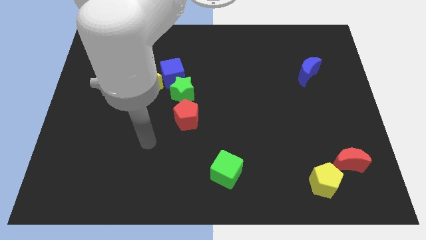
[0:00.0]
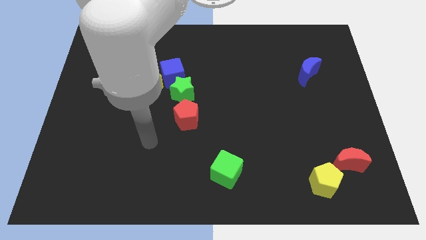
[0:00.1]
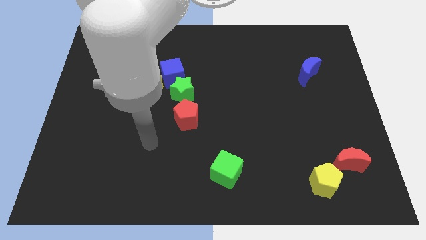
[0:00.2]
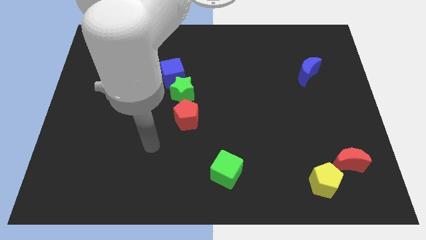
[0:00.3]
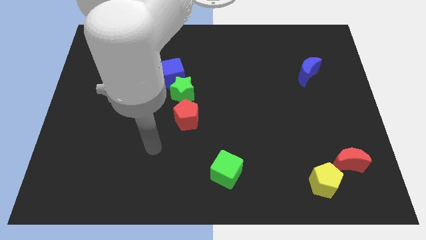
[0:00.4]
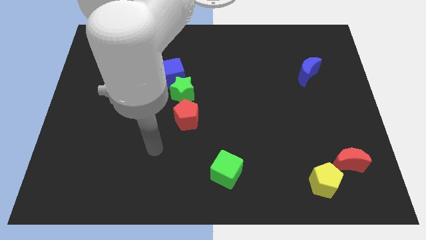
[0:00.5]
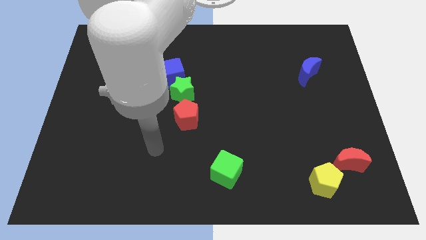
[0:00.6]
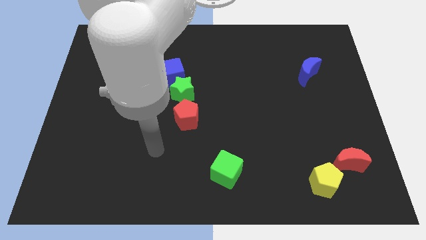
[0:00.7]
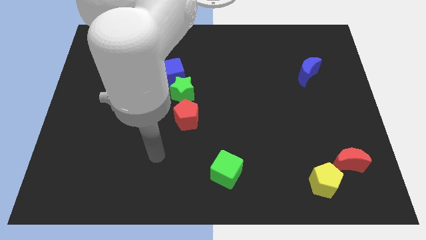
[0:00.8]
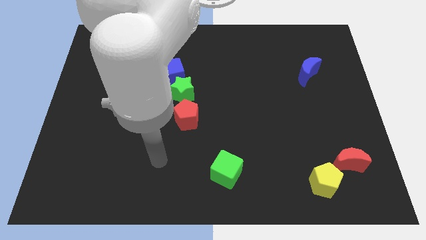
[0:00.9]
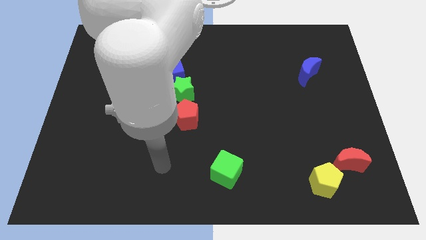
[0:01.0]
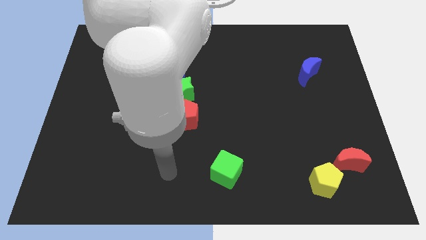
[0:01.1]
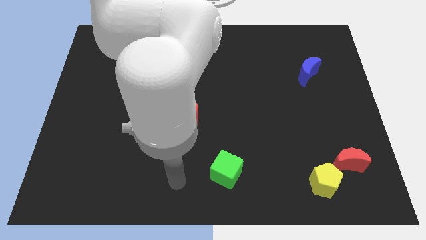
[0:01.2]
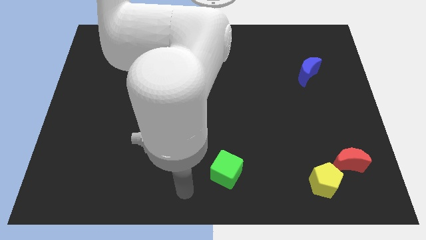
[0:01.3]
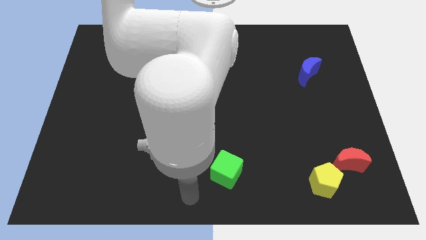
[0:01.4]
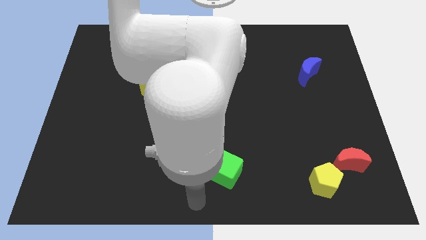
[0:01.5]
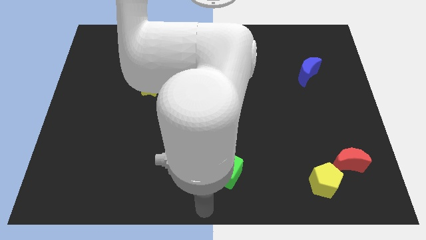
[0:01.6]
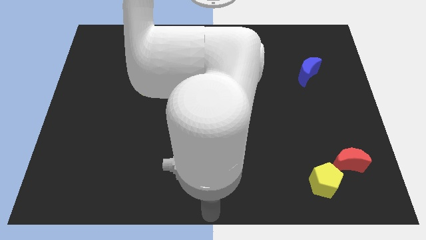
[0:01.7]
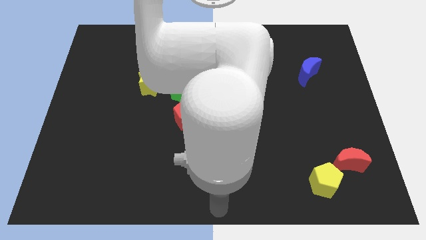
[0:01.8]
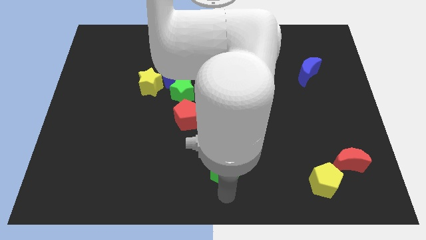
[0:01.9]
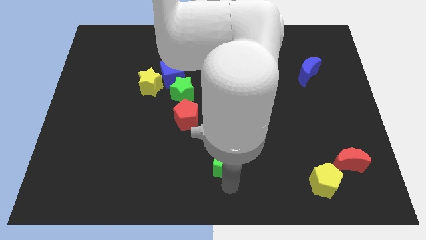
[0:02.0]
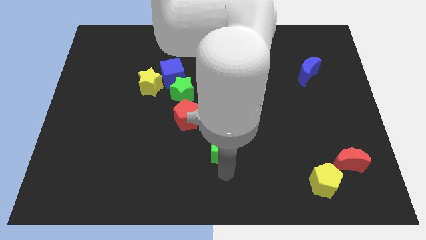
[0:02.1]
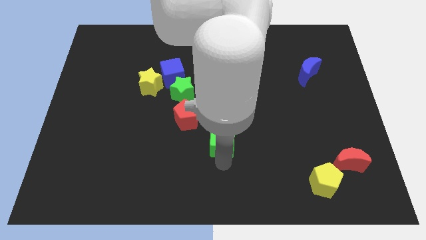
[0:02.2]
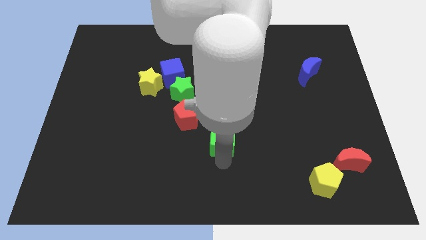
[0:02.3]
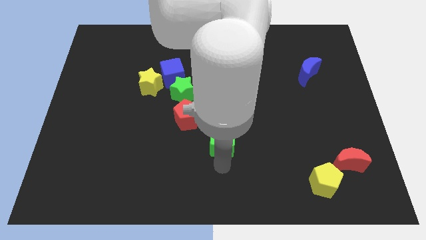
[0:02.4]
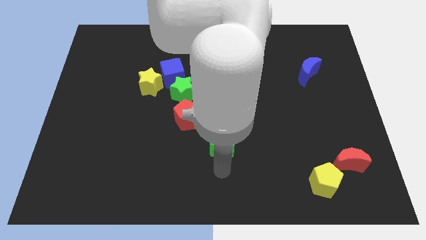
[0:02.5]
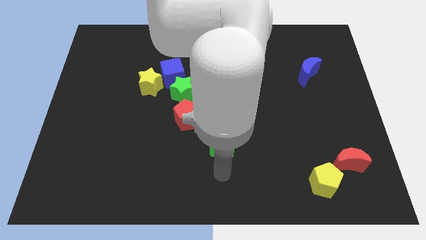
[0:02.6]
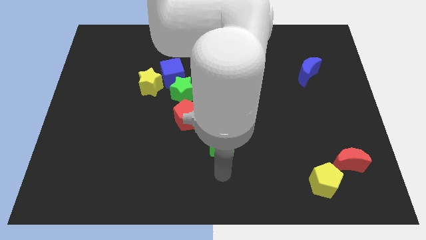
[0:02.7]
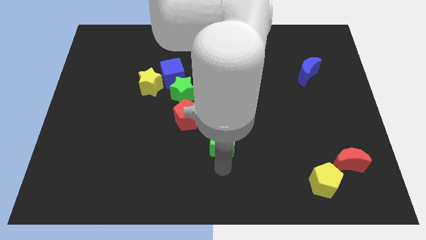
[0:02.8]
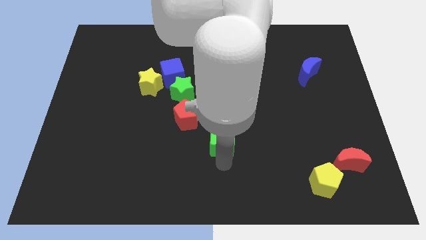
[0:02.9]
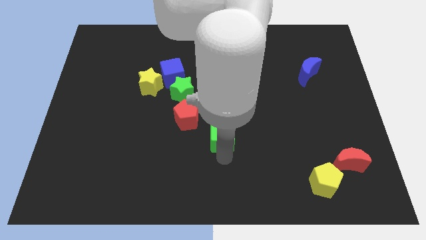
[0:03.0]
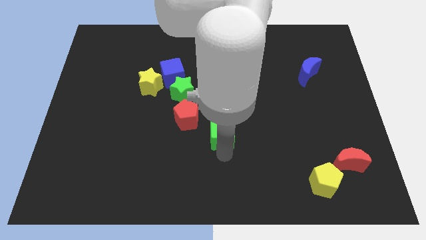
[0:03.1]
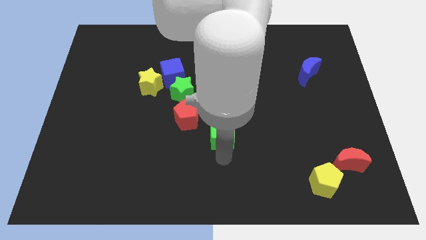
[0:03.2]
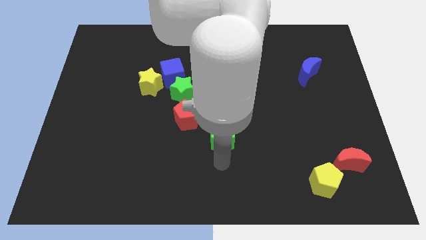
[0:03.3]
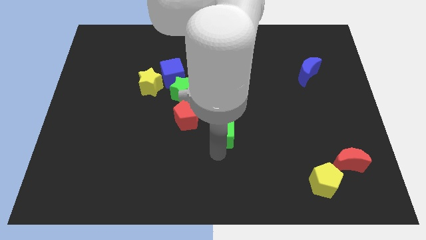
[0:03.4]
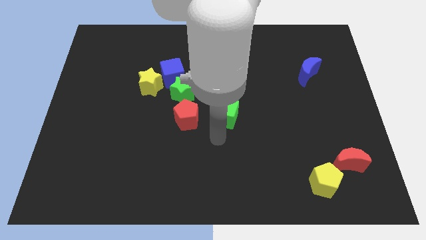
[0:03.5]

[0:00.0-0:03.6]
move the green cube to the right of the red pentagon

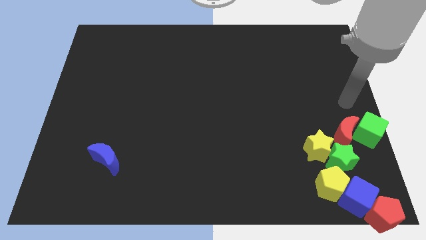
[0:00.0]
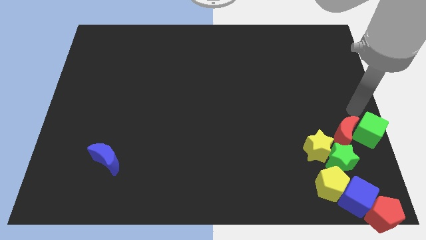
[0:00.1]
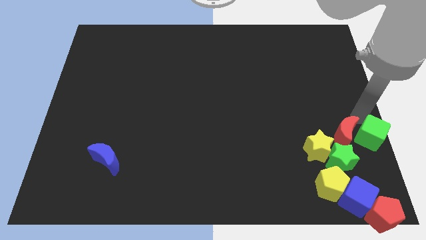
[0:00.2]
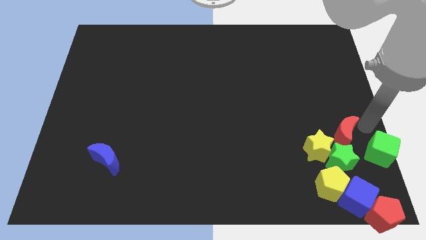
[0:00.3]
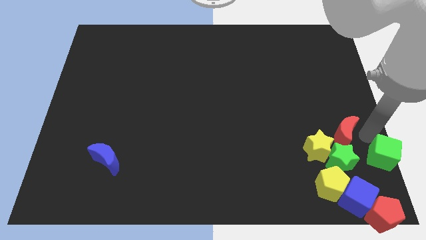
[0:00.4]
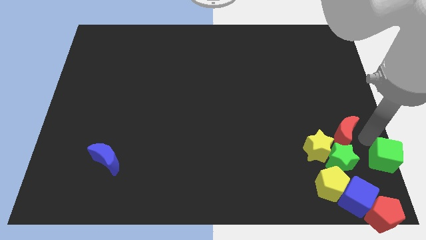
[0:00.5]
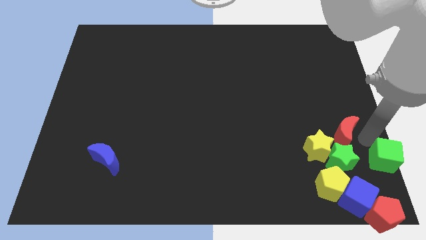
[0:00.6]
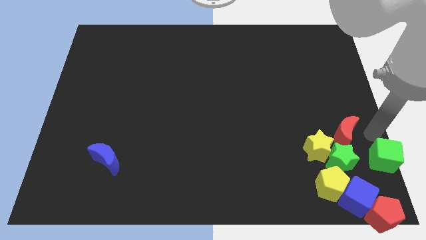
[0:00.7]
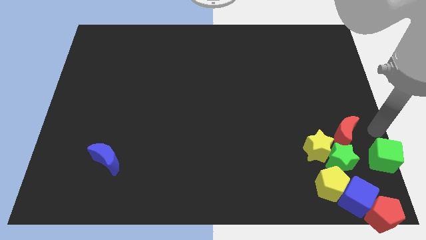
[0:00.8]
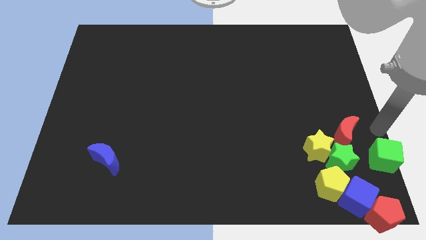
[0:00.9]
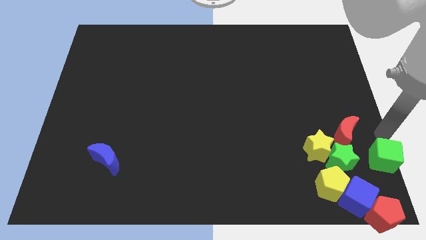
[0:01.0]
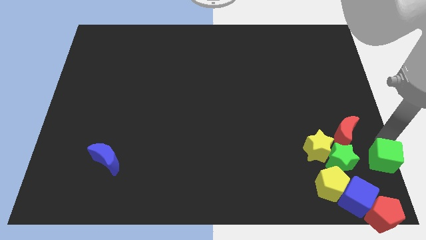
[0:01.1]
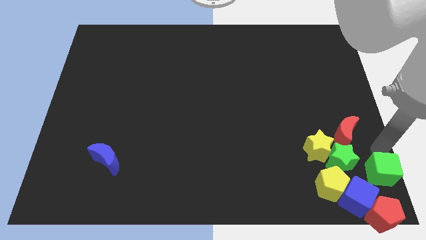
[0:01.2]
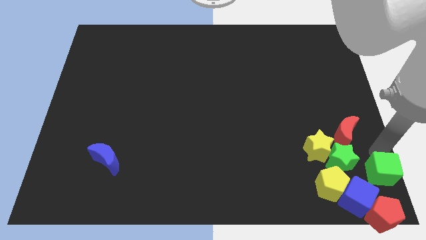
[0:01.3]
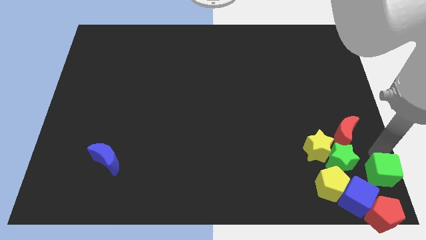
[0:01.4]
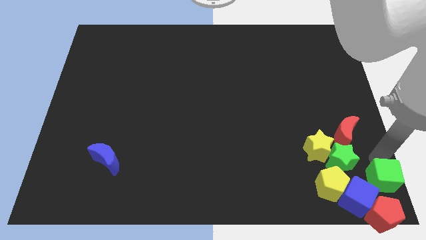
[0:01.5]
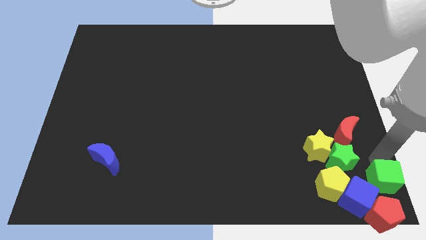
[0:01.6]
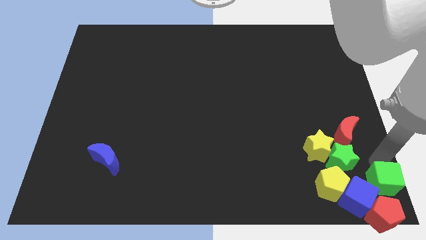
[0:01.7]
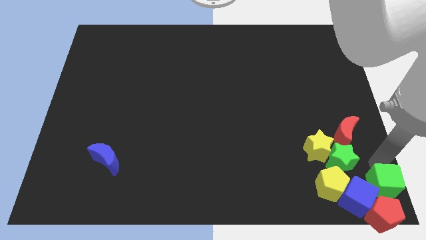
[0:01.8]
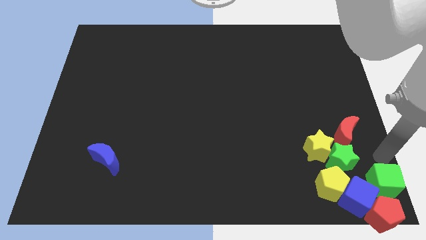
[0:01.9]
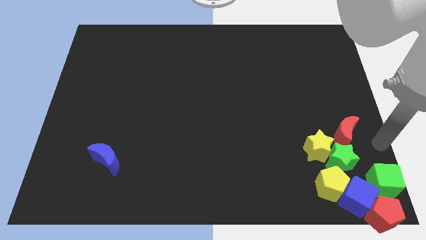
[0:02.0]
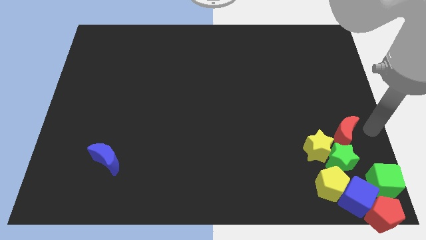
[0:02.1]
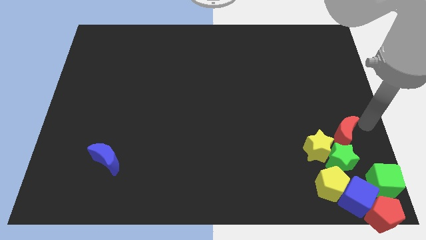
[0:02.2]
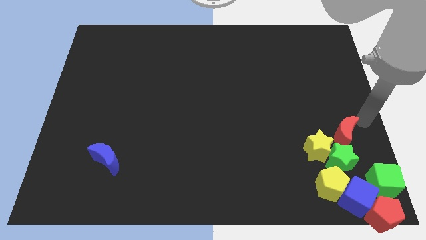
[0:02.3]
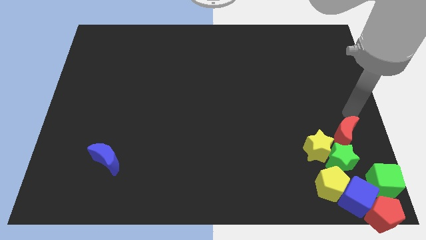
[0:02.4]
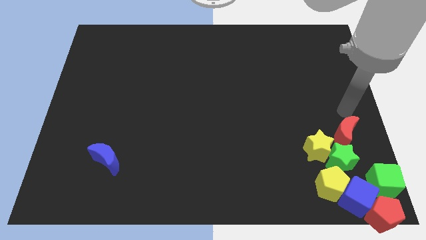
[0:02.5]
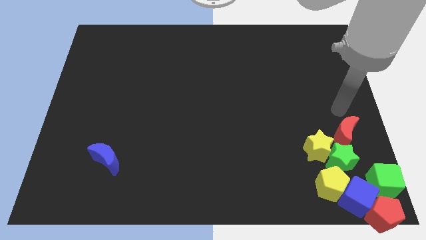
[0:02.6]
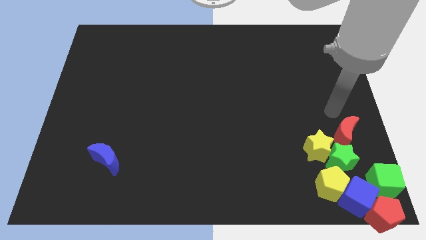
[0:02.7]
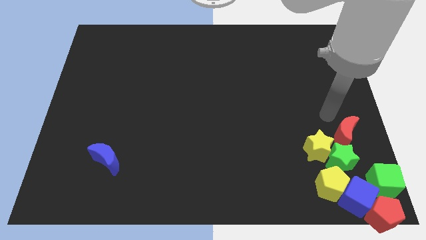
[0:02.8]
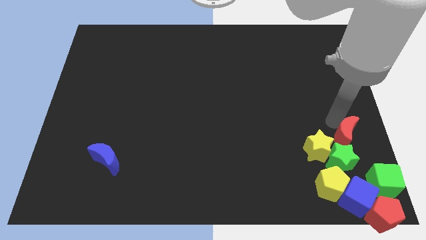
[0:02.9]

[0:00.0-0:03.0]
move green cube into red pentagon

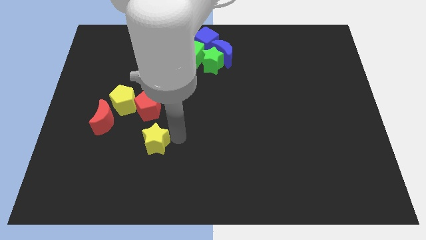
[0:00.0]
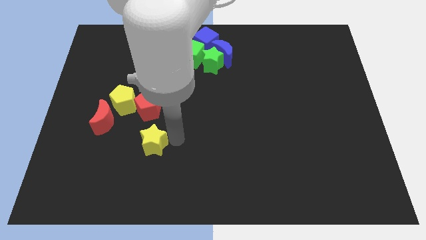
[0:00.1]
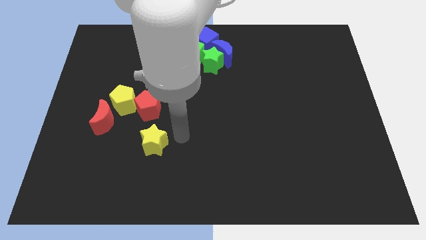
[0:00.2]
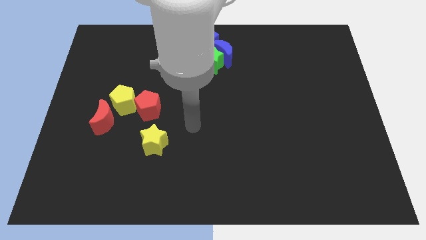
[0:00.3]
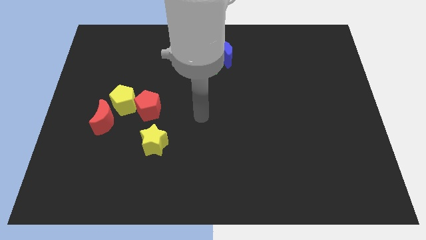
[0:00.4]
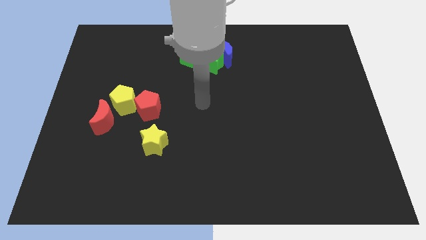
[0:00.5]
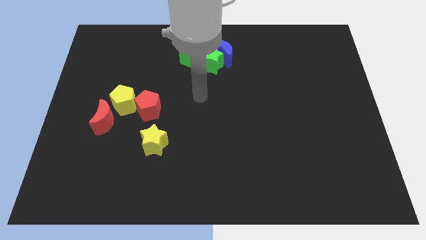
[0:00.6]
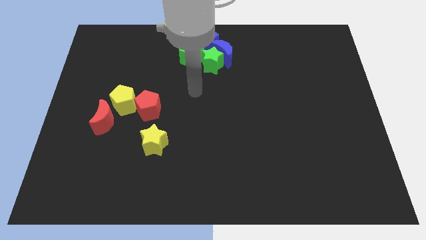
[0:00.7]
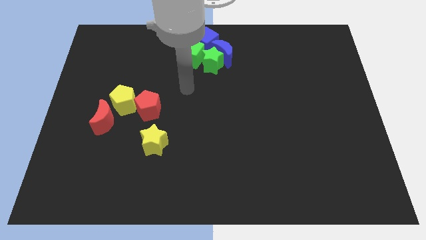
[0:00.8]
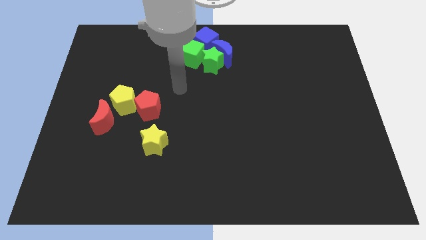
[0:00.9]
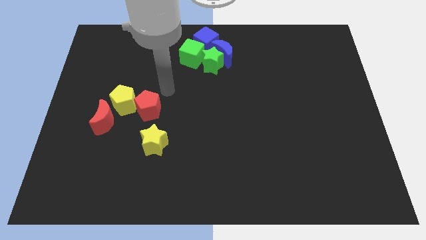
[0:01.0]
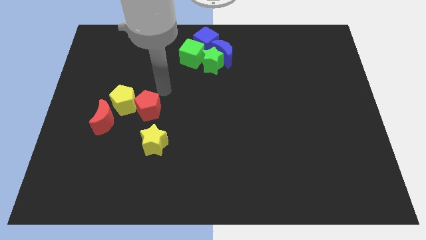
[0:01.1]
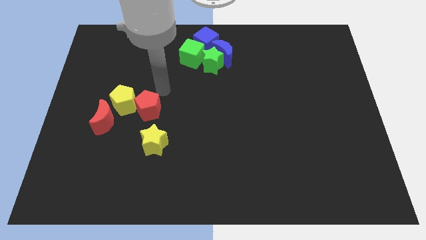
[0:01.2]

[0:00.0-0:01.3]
place the yellow star below the red pentagon

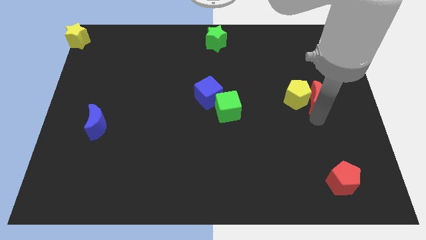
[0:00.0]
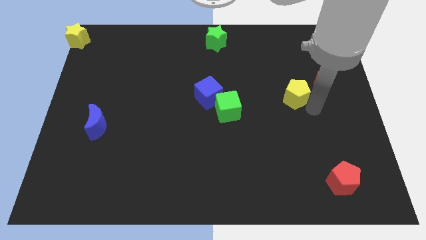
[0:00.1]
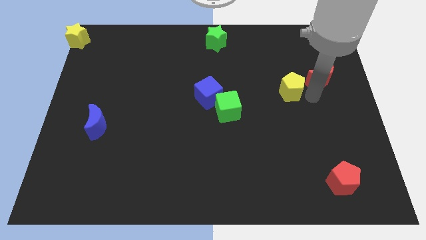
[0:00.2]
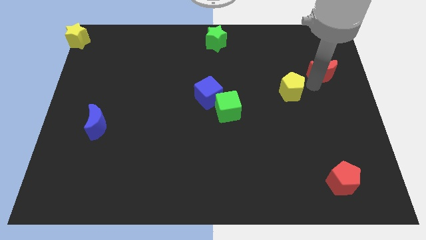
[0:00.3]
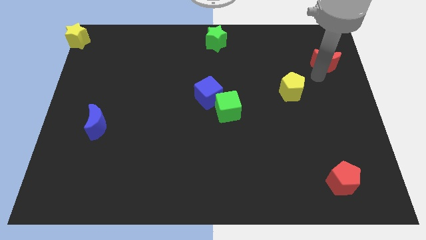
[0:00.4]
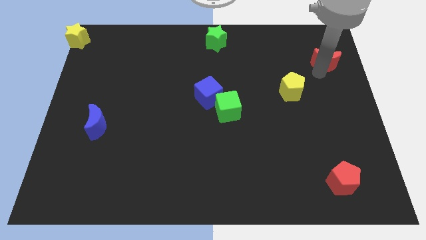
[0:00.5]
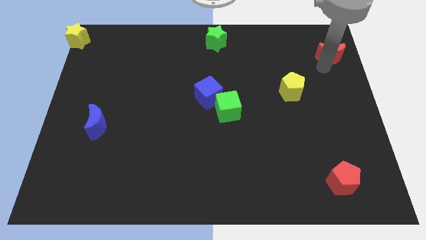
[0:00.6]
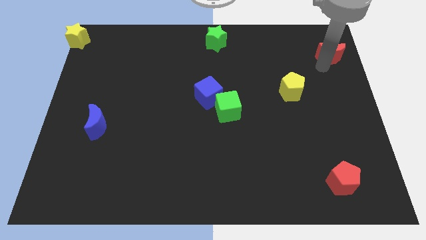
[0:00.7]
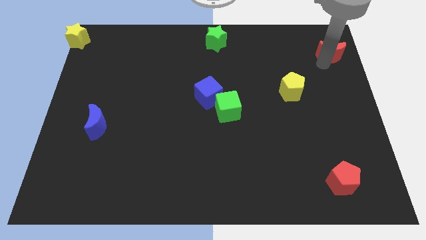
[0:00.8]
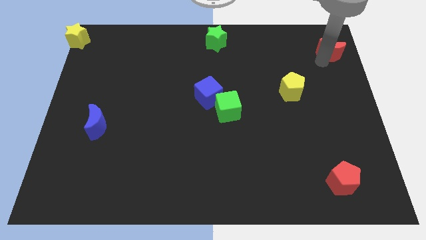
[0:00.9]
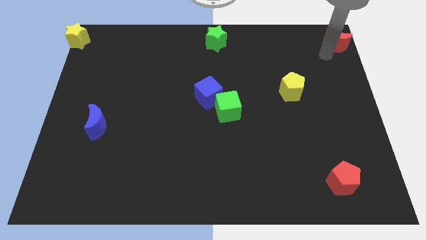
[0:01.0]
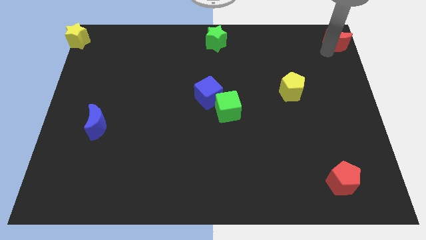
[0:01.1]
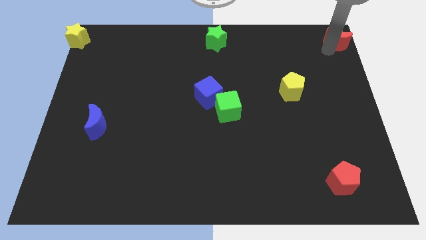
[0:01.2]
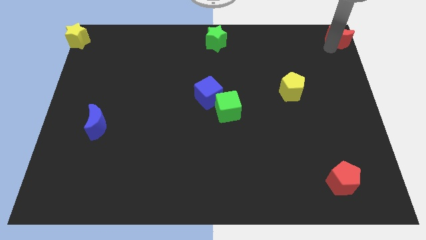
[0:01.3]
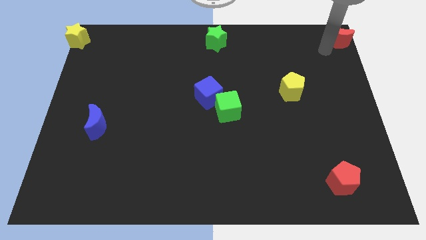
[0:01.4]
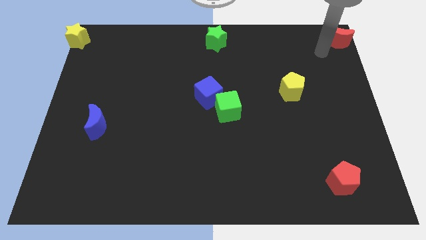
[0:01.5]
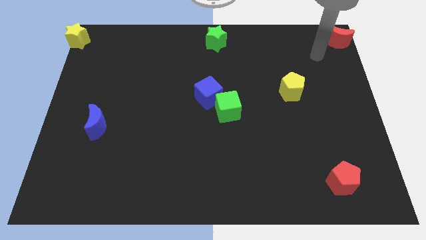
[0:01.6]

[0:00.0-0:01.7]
move the red crescent towards the top right of the board
